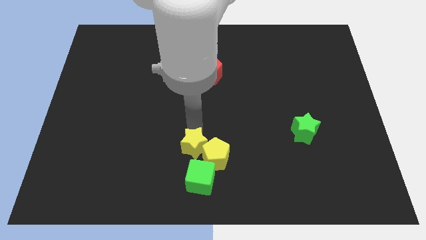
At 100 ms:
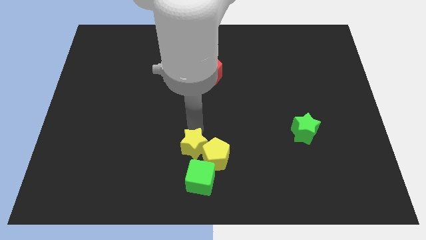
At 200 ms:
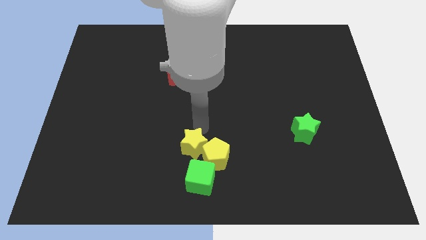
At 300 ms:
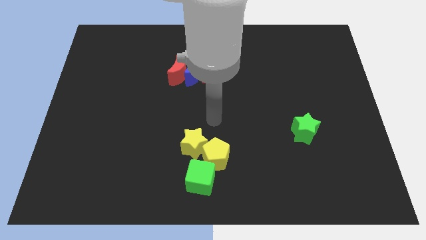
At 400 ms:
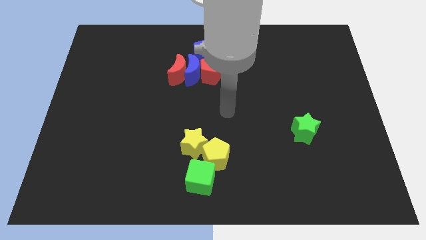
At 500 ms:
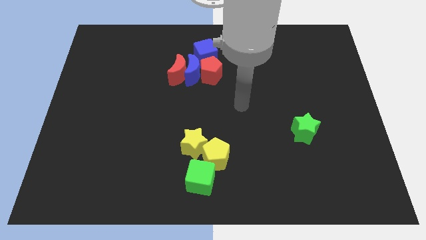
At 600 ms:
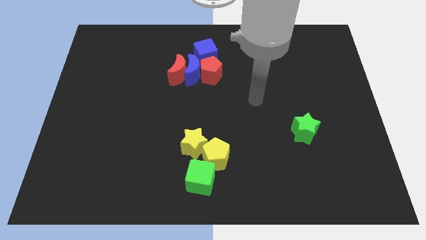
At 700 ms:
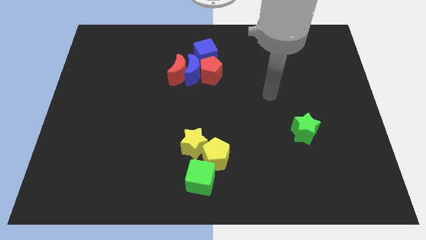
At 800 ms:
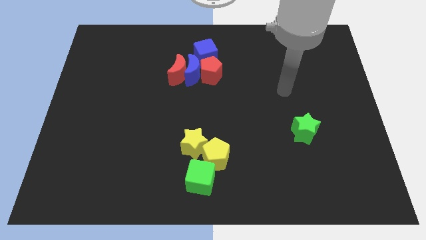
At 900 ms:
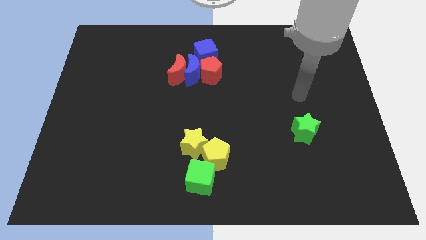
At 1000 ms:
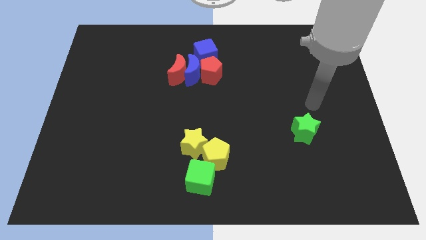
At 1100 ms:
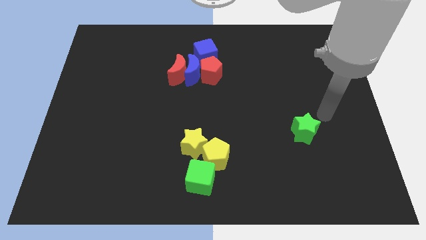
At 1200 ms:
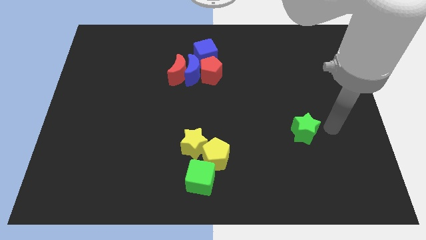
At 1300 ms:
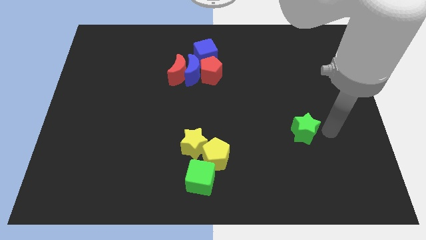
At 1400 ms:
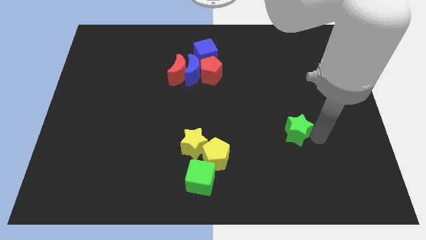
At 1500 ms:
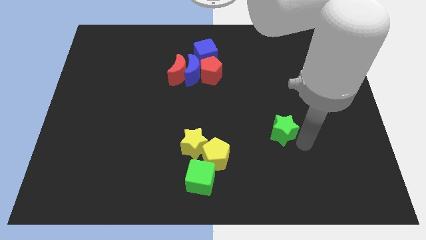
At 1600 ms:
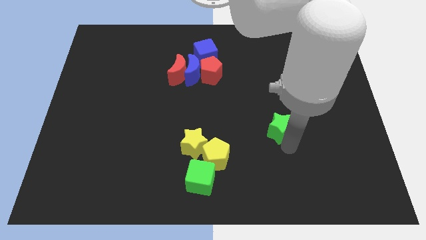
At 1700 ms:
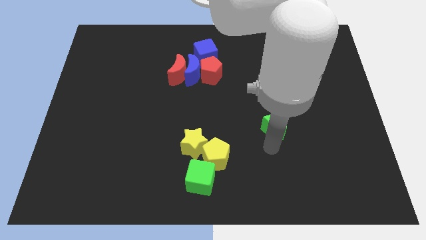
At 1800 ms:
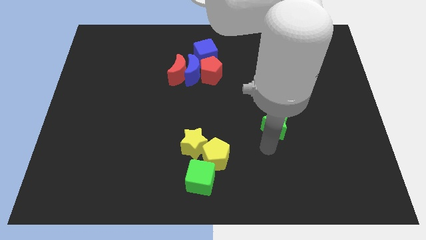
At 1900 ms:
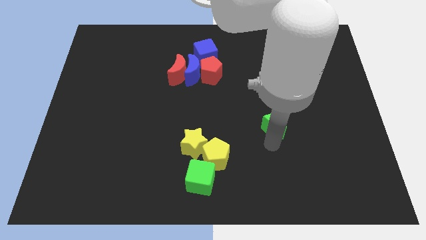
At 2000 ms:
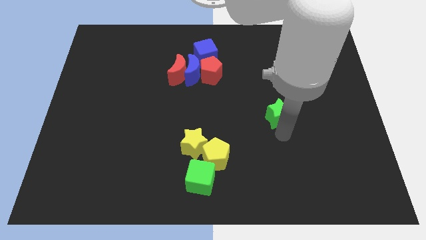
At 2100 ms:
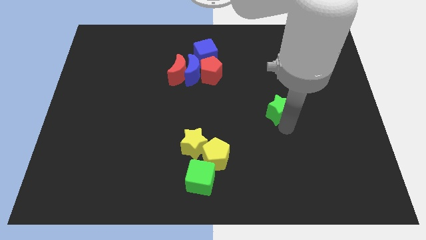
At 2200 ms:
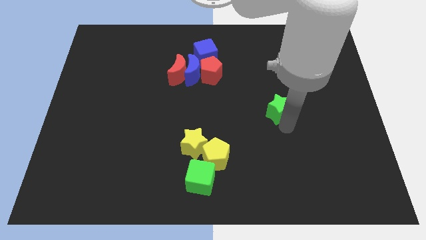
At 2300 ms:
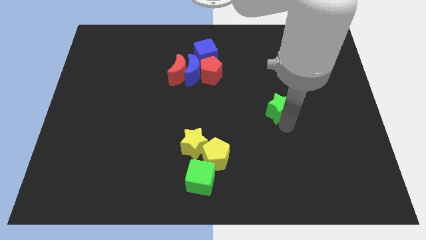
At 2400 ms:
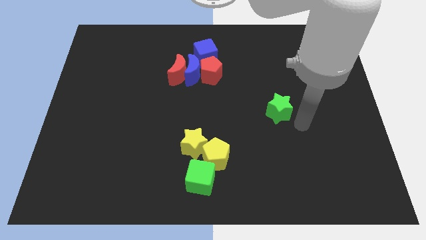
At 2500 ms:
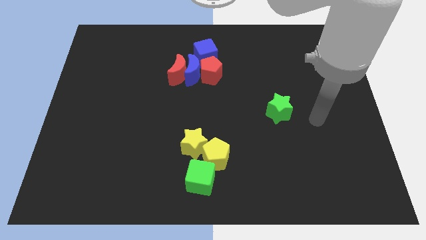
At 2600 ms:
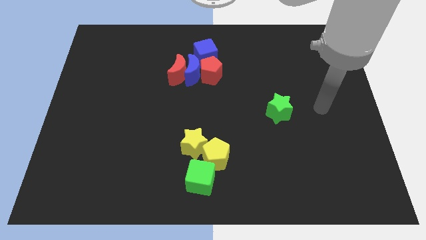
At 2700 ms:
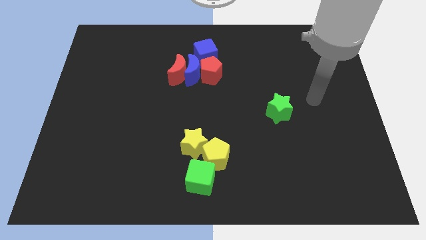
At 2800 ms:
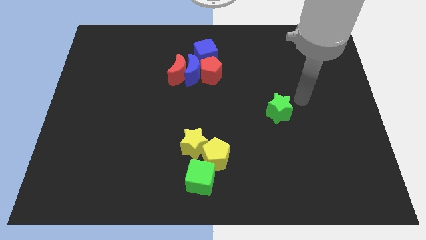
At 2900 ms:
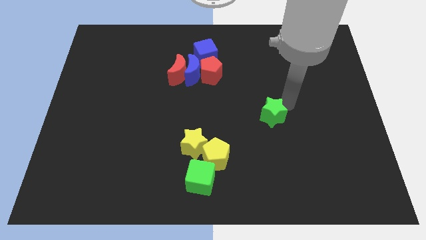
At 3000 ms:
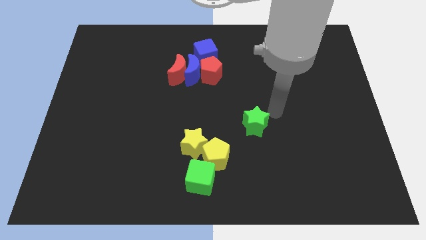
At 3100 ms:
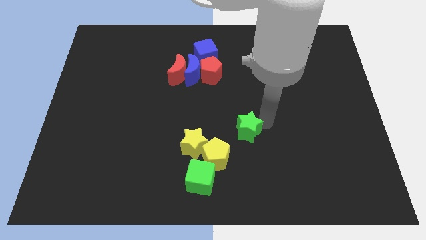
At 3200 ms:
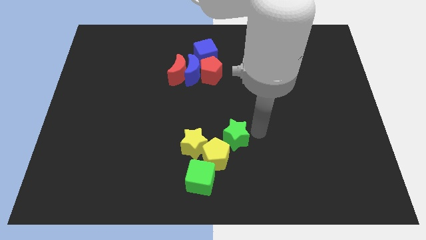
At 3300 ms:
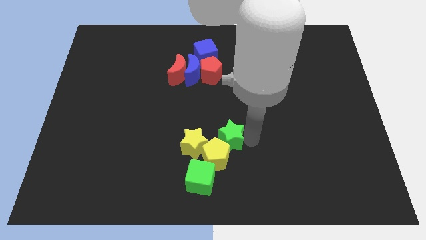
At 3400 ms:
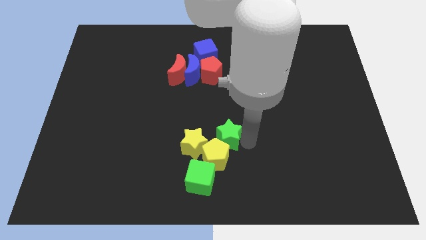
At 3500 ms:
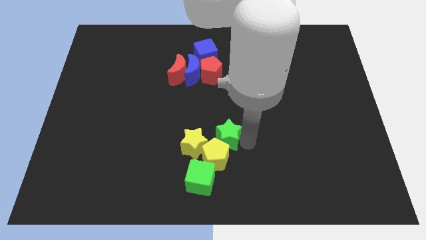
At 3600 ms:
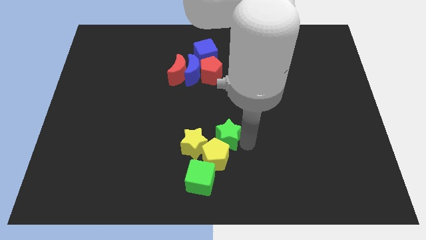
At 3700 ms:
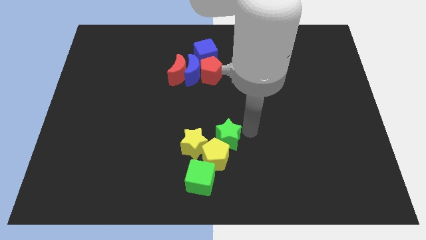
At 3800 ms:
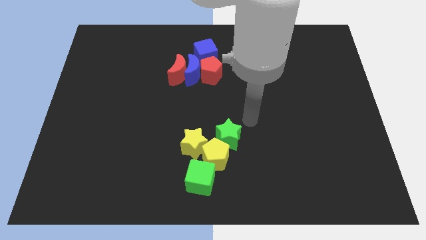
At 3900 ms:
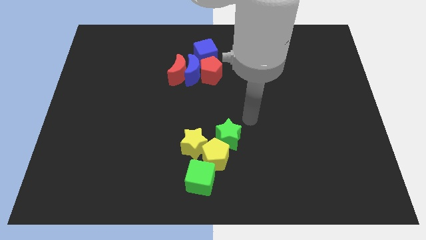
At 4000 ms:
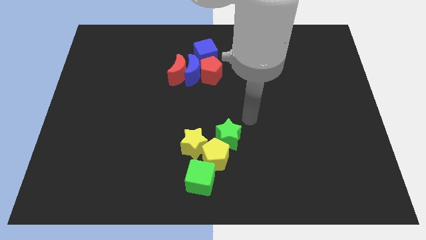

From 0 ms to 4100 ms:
move the green star close to yellow pentagon

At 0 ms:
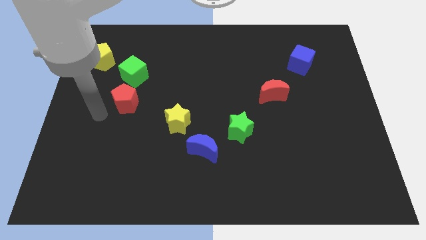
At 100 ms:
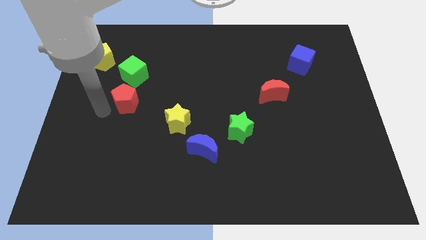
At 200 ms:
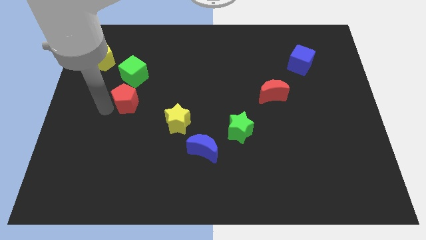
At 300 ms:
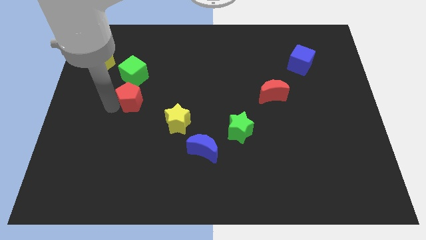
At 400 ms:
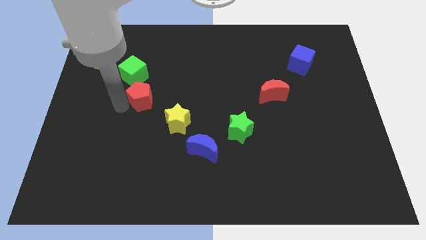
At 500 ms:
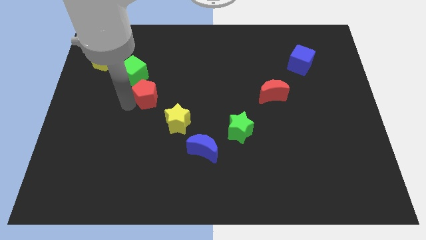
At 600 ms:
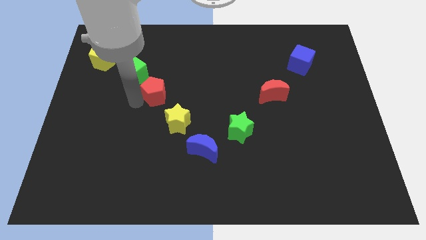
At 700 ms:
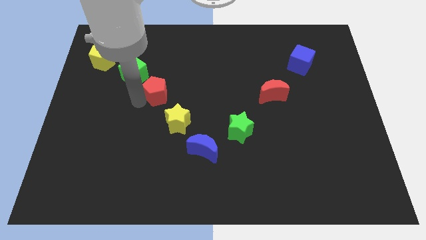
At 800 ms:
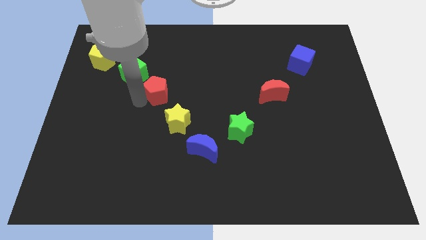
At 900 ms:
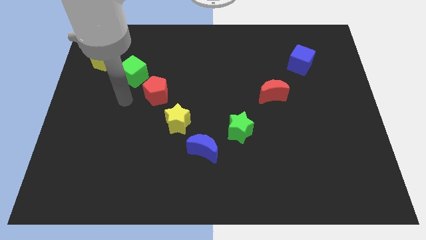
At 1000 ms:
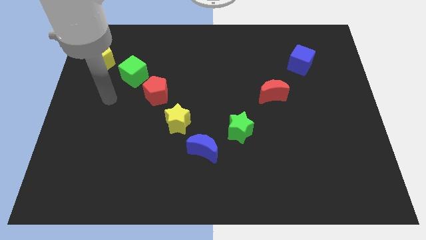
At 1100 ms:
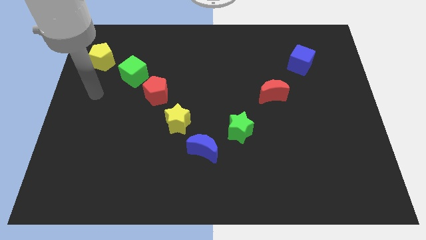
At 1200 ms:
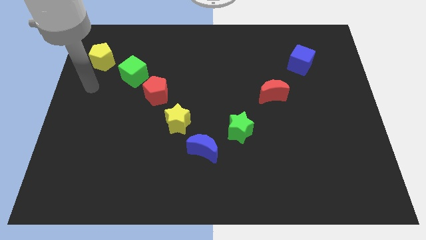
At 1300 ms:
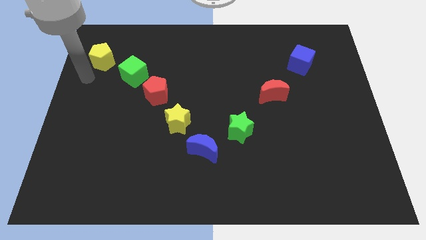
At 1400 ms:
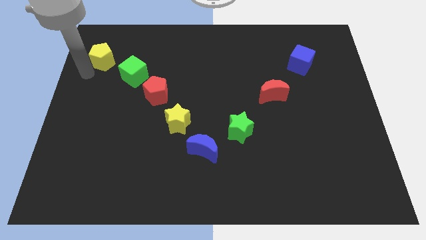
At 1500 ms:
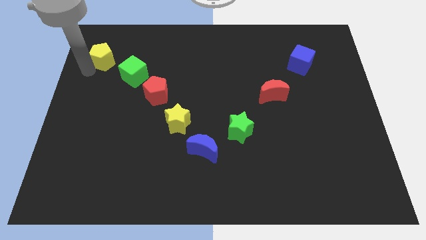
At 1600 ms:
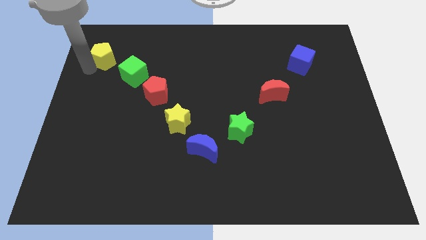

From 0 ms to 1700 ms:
adjust red pentagon in the line of other blocks

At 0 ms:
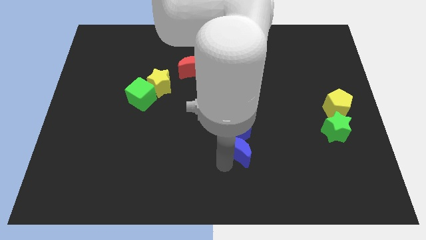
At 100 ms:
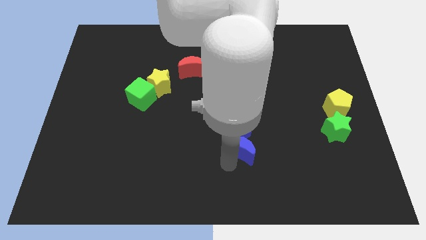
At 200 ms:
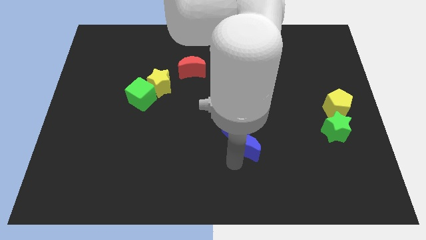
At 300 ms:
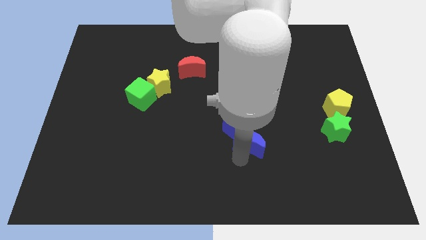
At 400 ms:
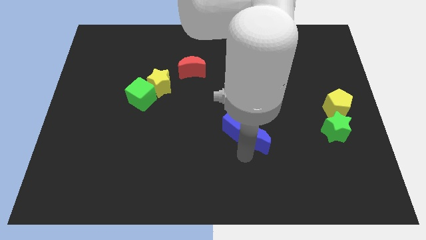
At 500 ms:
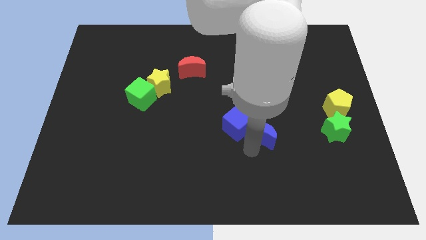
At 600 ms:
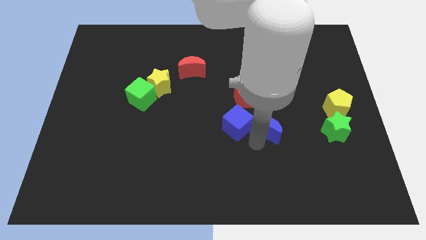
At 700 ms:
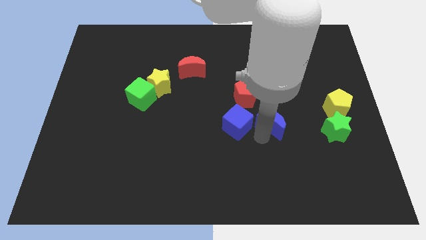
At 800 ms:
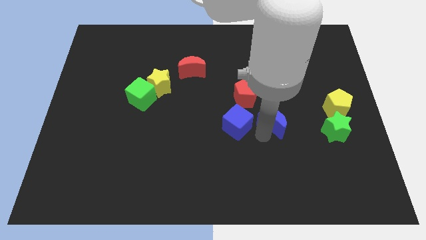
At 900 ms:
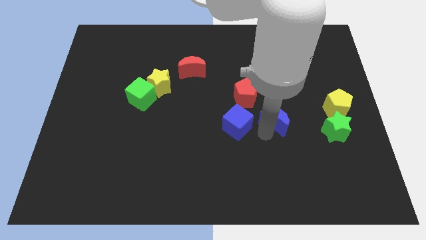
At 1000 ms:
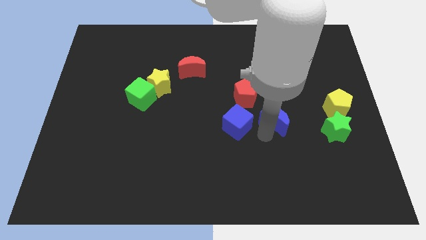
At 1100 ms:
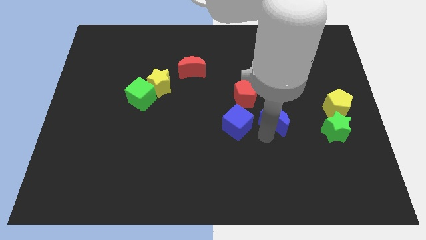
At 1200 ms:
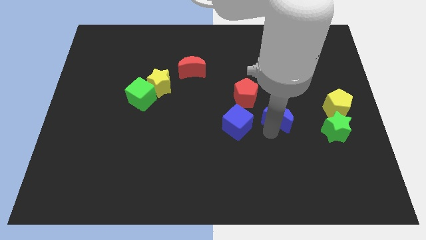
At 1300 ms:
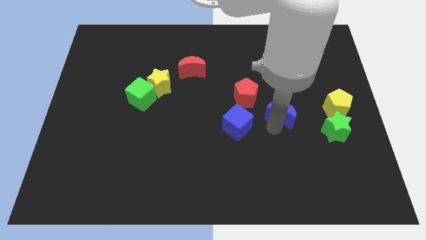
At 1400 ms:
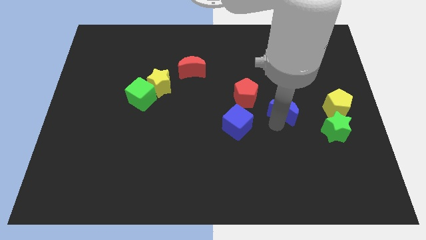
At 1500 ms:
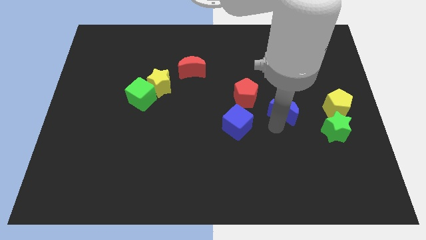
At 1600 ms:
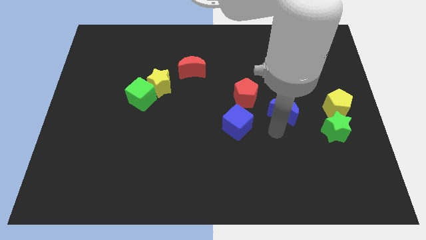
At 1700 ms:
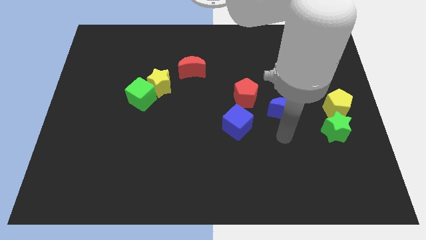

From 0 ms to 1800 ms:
move the blue crescent away from the blue cube

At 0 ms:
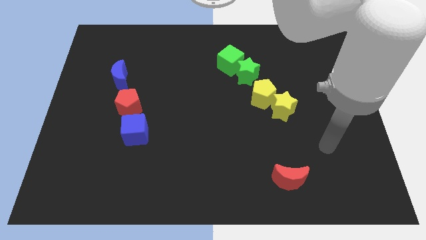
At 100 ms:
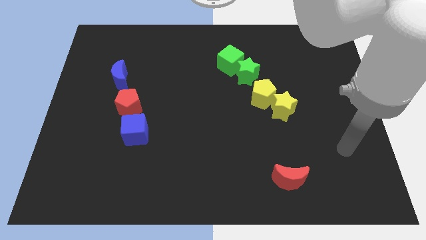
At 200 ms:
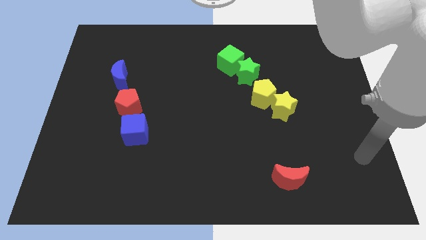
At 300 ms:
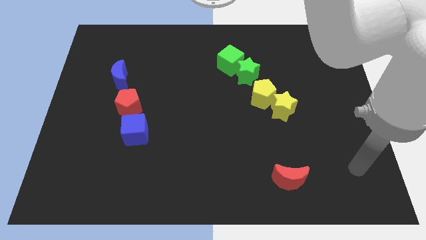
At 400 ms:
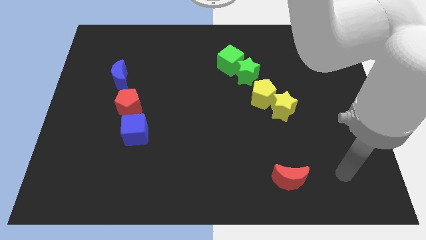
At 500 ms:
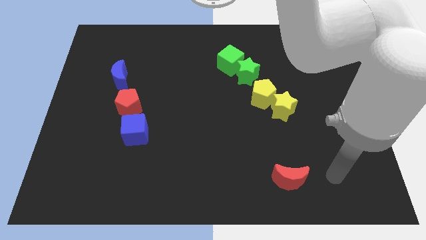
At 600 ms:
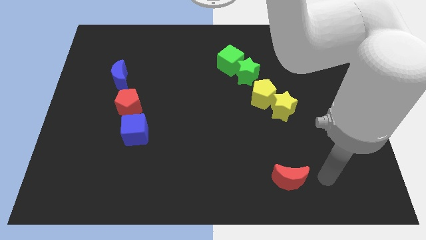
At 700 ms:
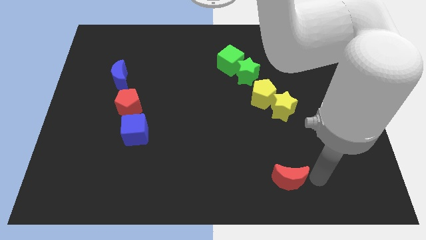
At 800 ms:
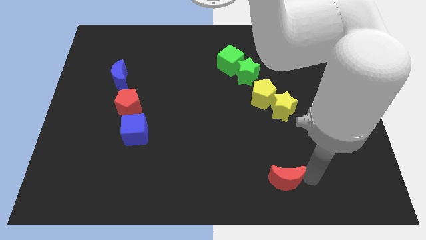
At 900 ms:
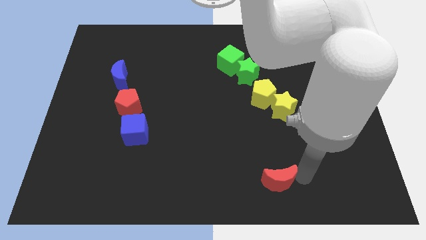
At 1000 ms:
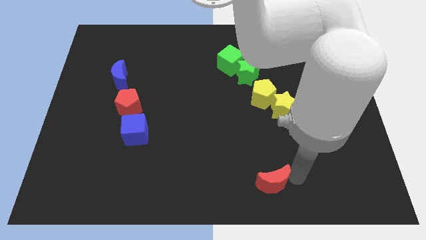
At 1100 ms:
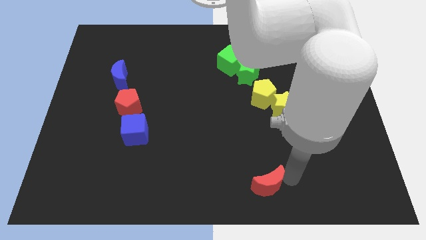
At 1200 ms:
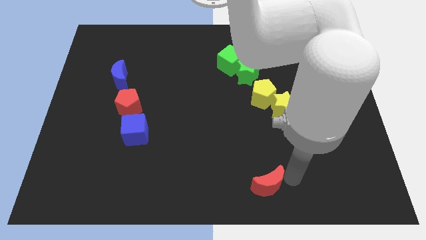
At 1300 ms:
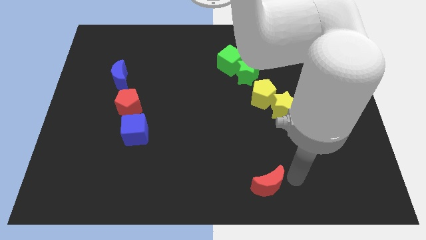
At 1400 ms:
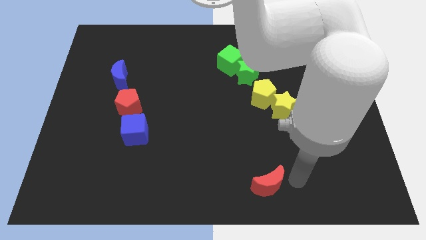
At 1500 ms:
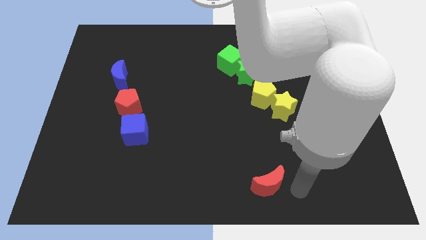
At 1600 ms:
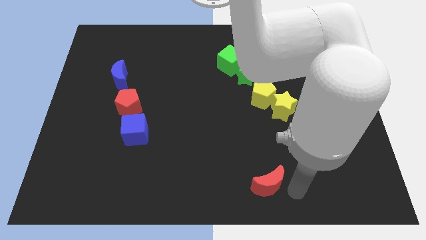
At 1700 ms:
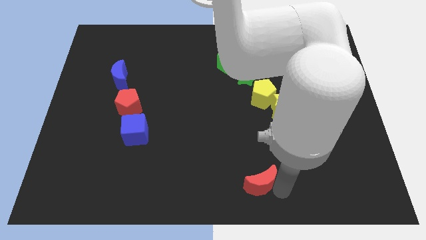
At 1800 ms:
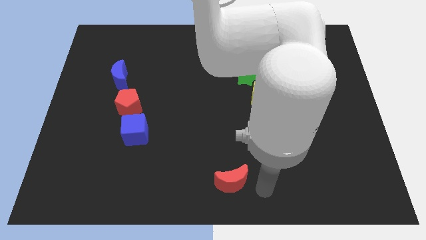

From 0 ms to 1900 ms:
put the red moon vertically at the bottom side of the yellow pentagon
